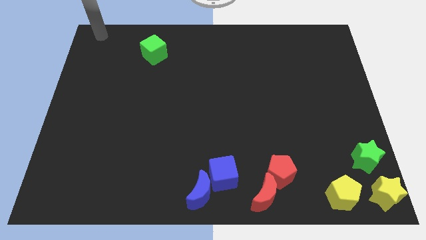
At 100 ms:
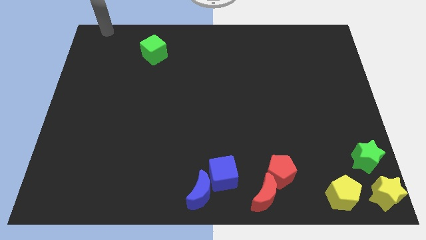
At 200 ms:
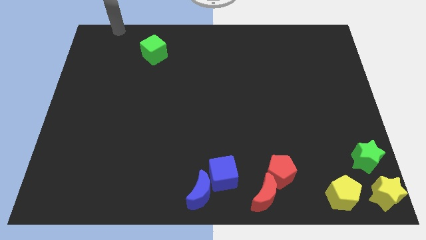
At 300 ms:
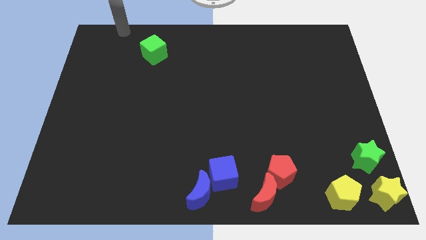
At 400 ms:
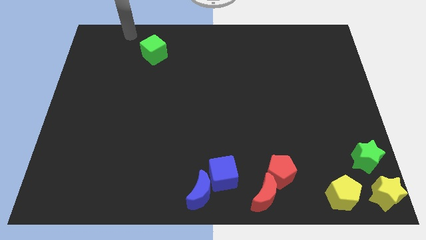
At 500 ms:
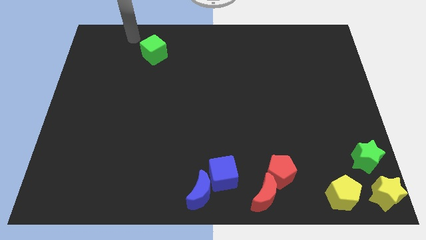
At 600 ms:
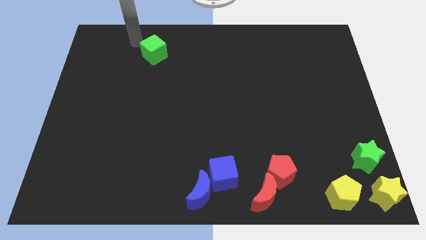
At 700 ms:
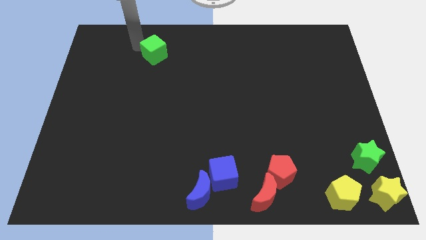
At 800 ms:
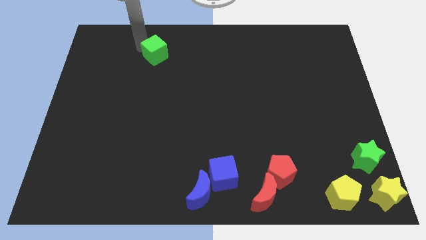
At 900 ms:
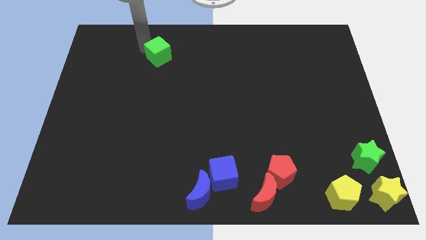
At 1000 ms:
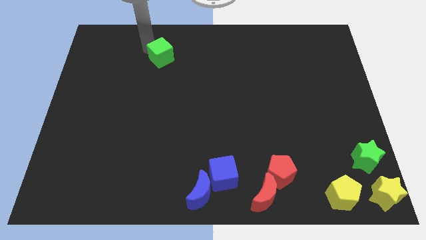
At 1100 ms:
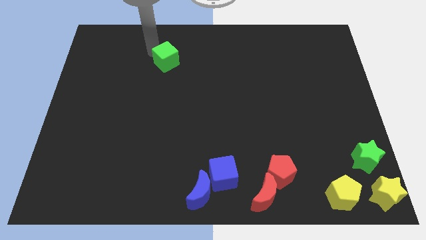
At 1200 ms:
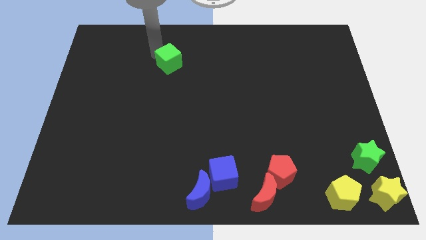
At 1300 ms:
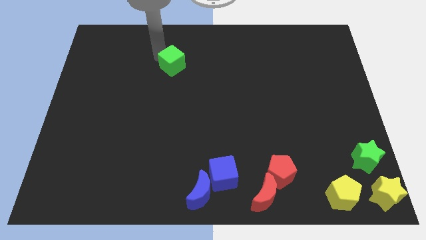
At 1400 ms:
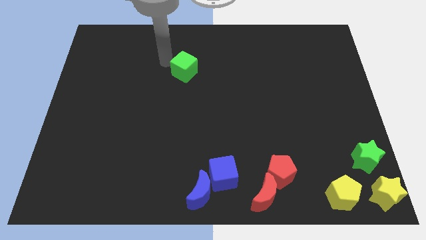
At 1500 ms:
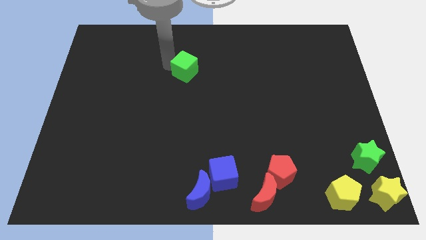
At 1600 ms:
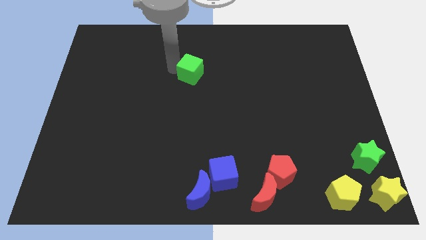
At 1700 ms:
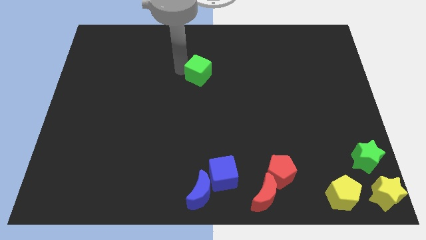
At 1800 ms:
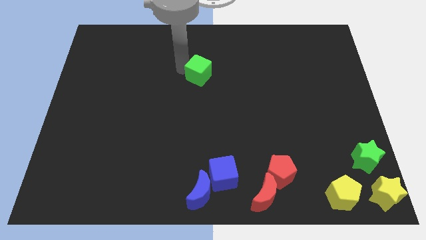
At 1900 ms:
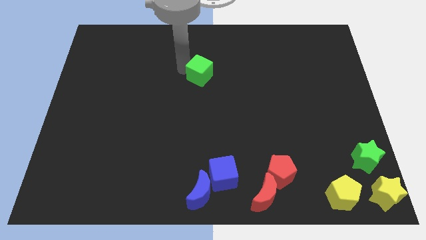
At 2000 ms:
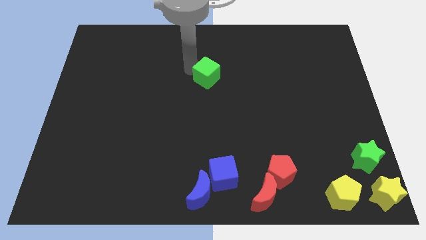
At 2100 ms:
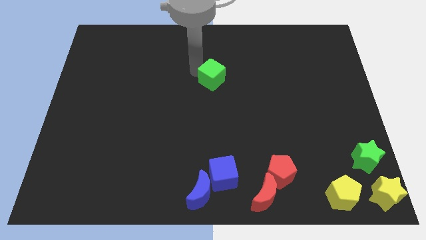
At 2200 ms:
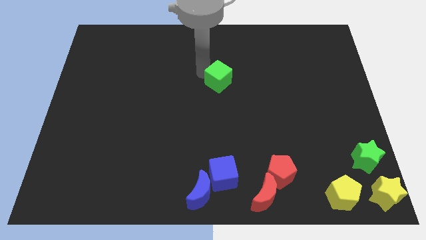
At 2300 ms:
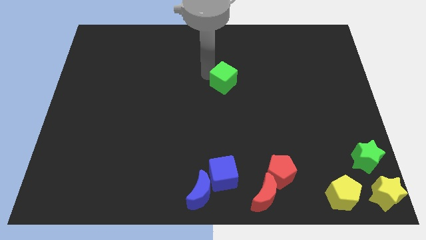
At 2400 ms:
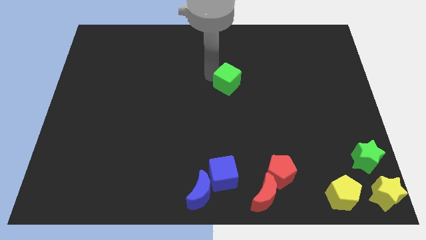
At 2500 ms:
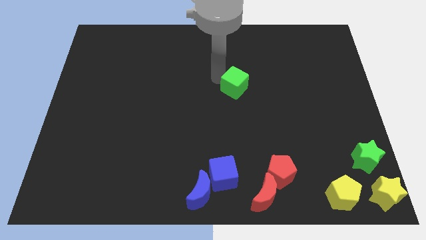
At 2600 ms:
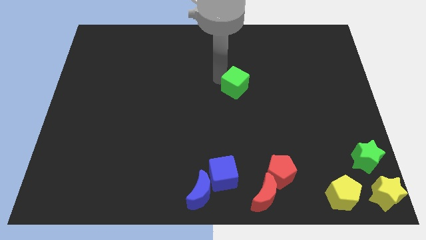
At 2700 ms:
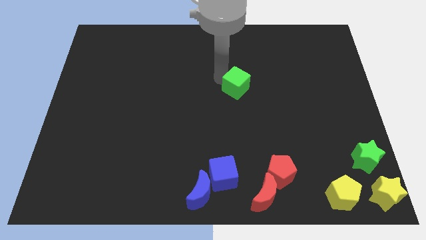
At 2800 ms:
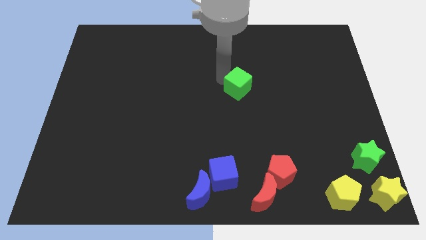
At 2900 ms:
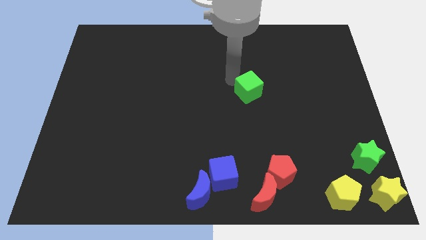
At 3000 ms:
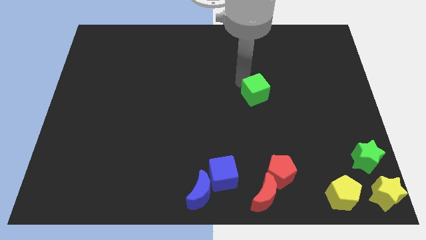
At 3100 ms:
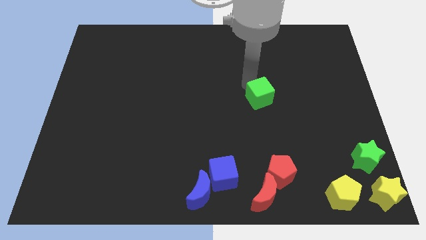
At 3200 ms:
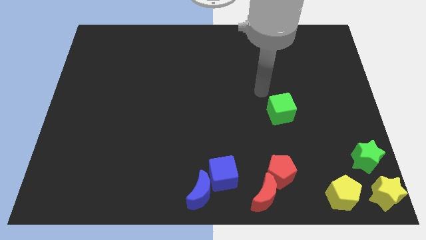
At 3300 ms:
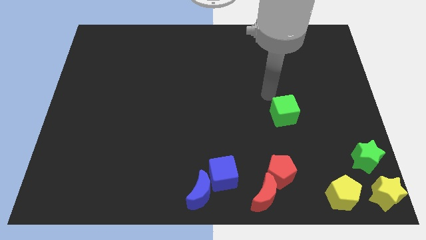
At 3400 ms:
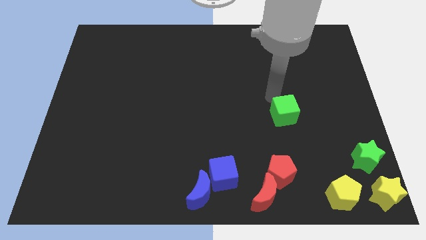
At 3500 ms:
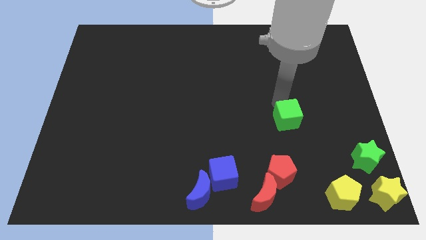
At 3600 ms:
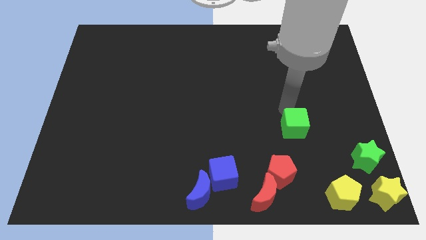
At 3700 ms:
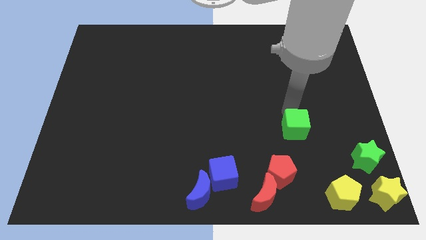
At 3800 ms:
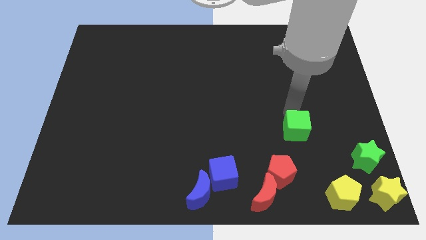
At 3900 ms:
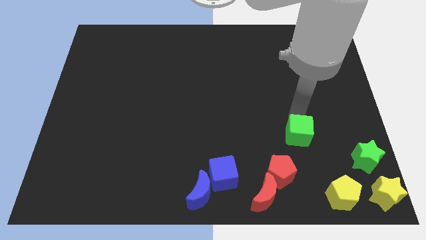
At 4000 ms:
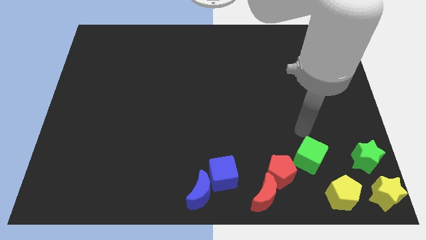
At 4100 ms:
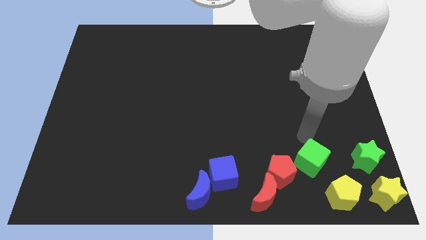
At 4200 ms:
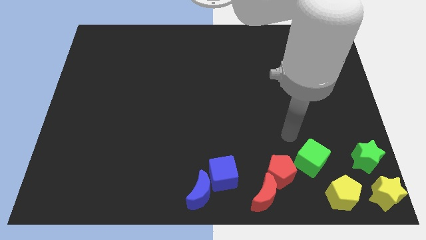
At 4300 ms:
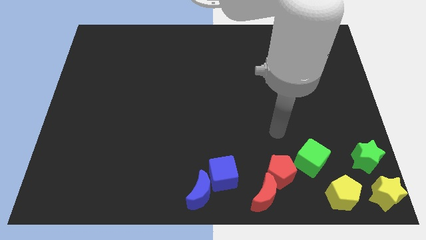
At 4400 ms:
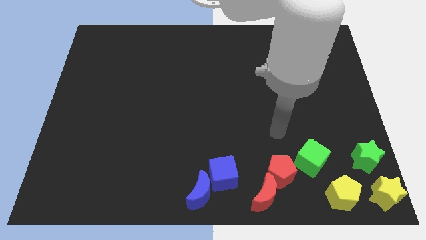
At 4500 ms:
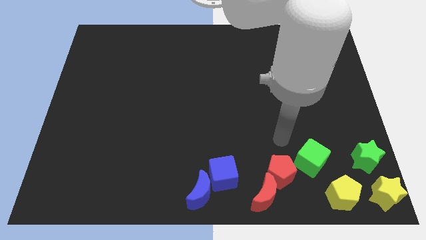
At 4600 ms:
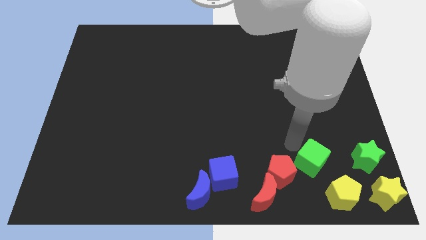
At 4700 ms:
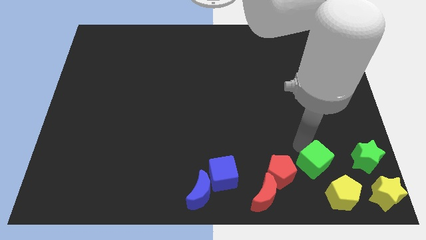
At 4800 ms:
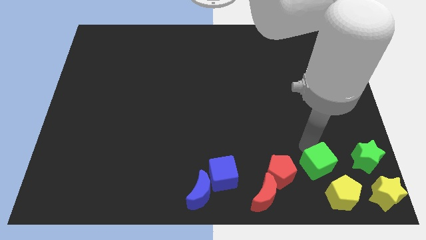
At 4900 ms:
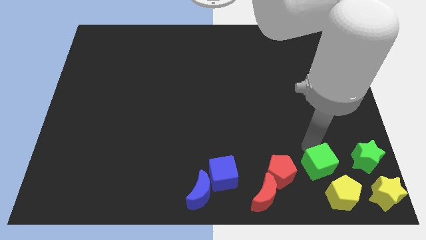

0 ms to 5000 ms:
push the green cube to the left of the green star

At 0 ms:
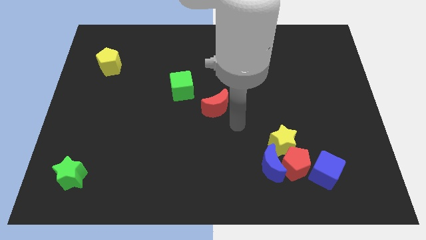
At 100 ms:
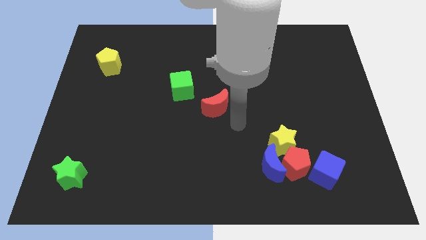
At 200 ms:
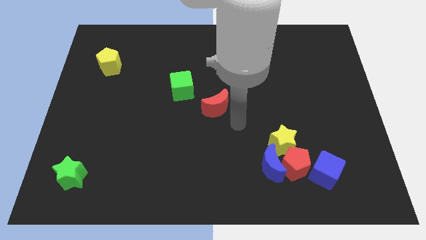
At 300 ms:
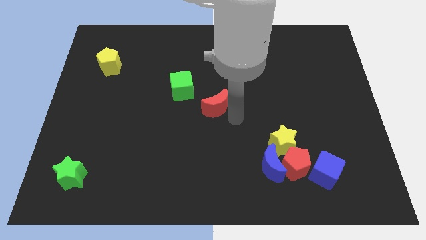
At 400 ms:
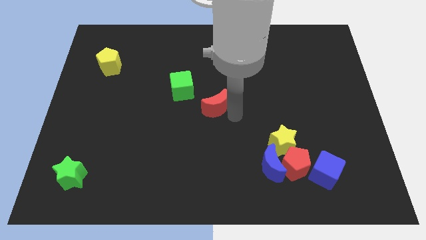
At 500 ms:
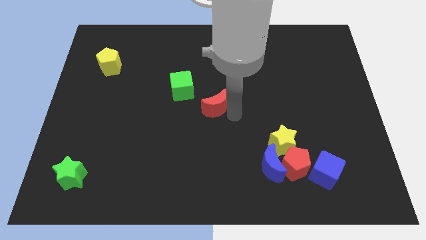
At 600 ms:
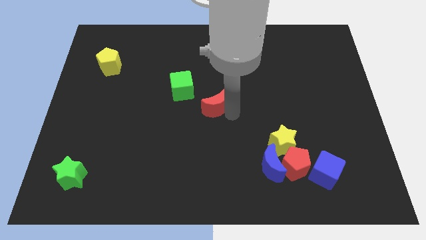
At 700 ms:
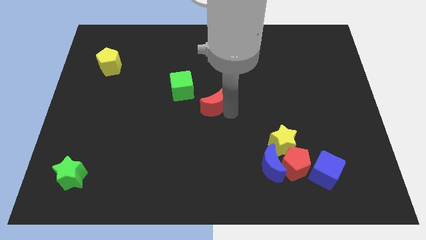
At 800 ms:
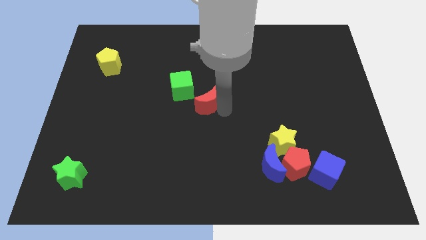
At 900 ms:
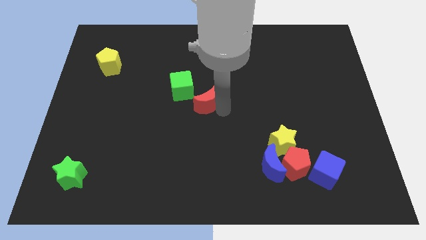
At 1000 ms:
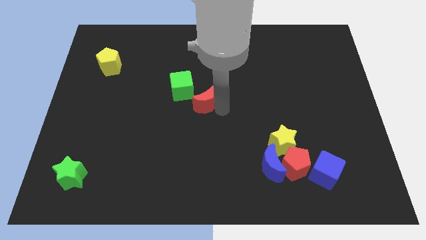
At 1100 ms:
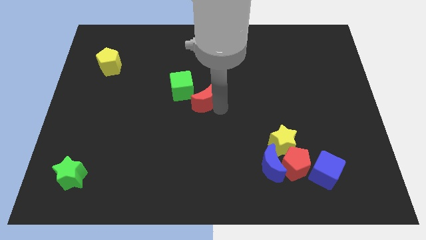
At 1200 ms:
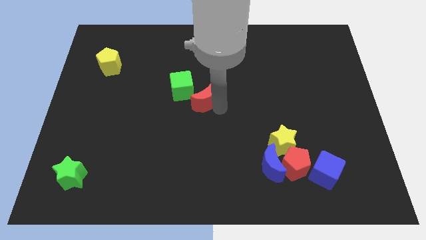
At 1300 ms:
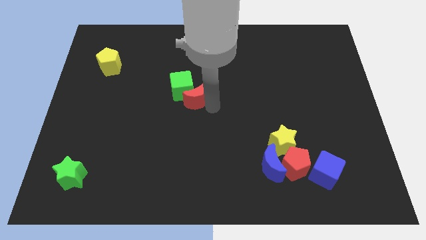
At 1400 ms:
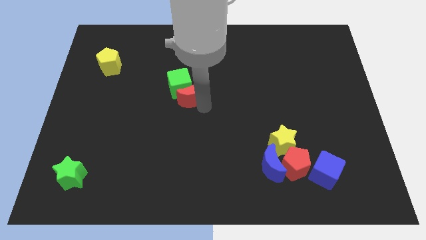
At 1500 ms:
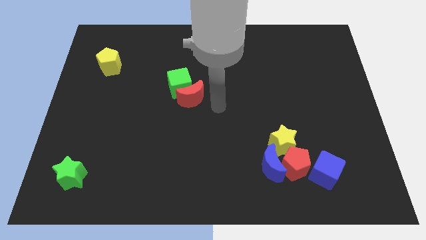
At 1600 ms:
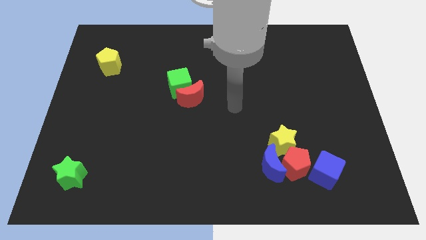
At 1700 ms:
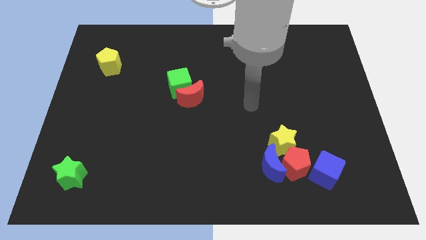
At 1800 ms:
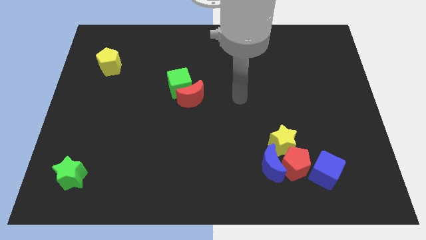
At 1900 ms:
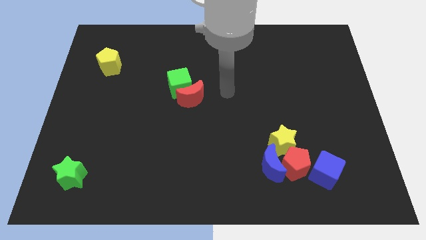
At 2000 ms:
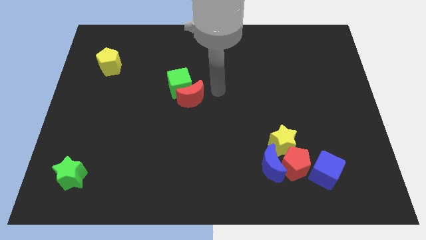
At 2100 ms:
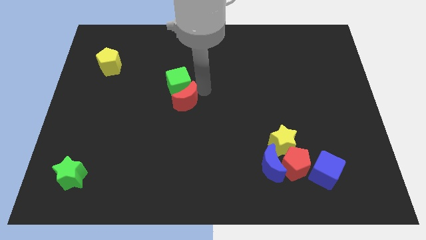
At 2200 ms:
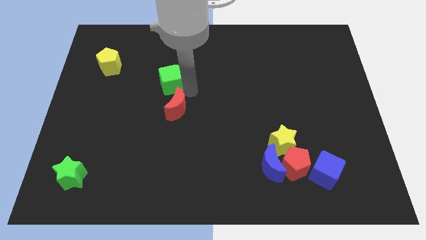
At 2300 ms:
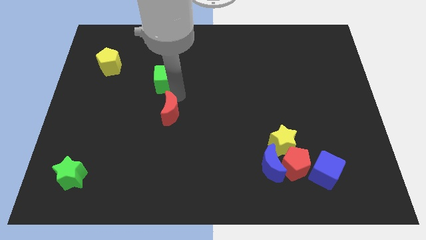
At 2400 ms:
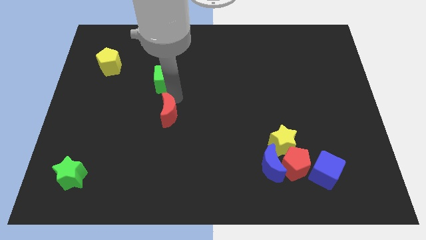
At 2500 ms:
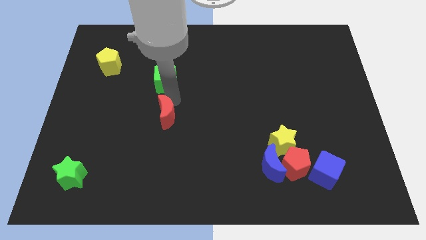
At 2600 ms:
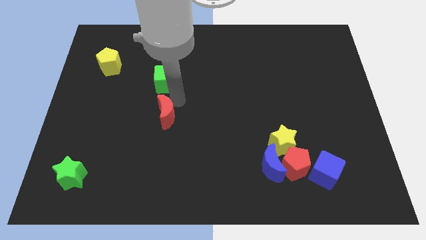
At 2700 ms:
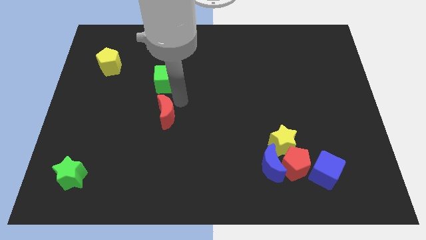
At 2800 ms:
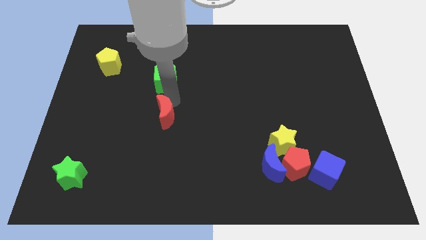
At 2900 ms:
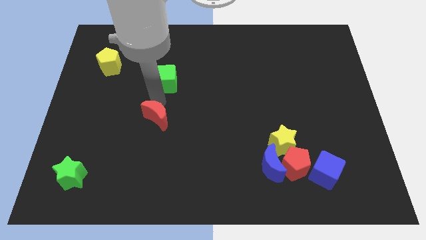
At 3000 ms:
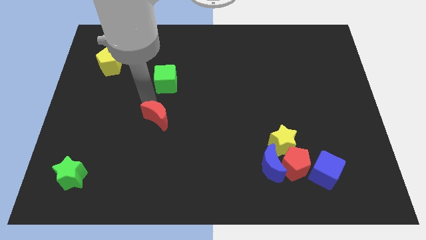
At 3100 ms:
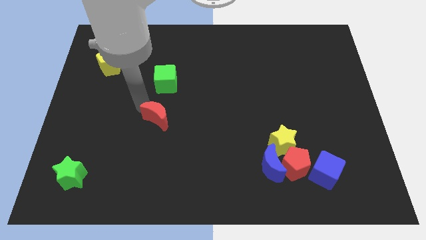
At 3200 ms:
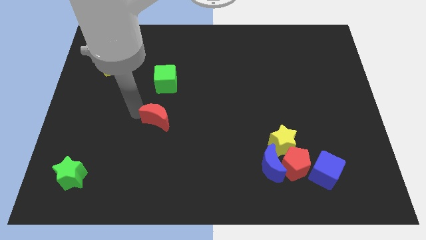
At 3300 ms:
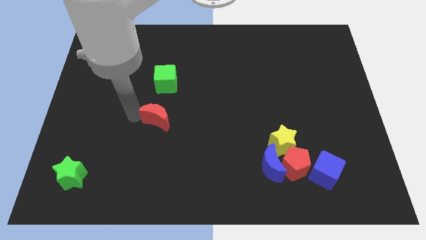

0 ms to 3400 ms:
move the red crescent close to the green cube

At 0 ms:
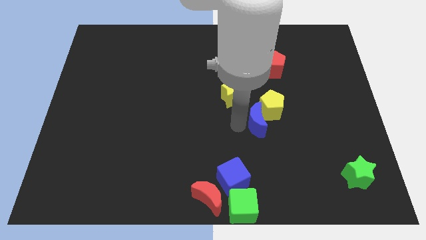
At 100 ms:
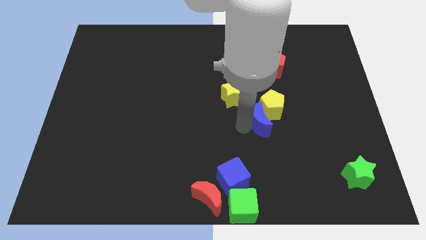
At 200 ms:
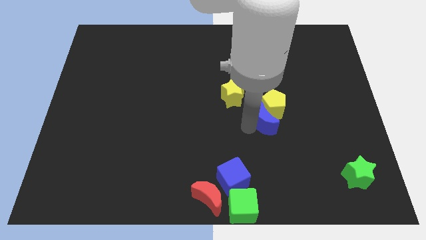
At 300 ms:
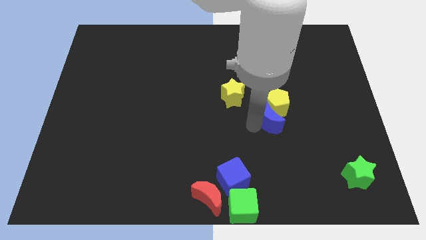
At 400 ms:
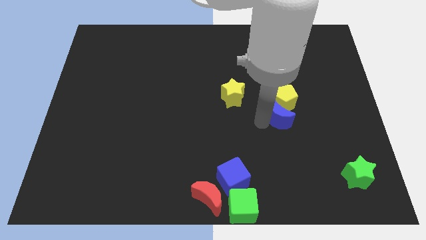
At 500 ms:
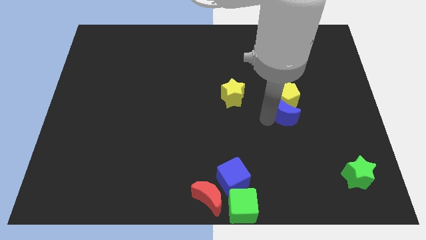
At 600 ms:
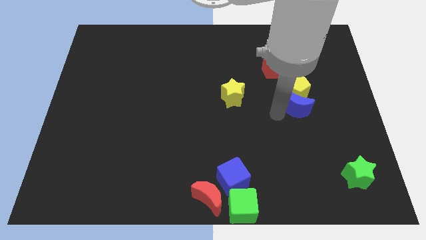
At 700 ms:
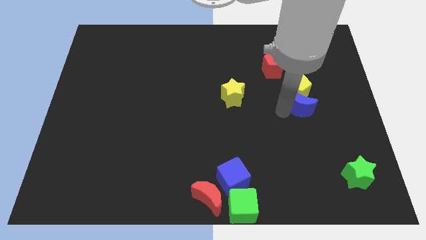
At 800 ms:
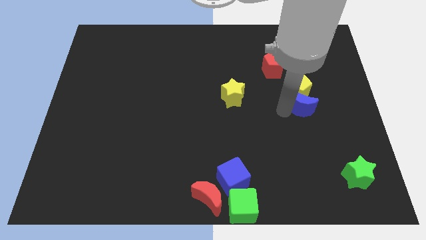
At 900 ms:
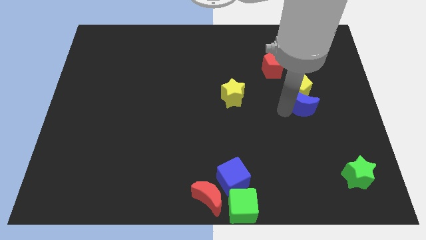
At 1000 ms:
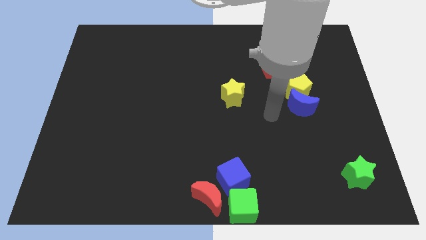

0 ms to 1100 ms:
move the yellow pentagon along with the blue crescent to the left of the yellow star
